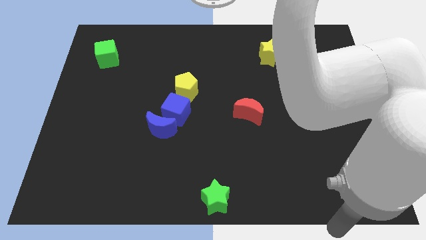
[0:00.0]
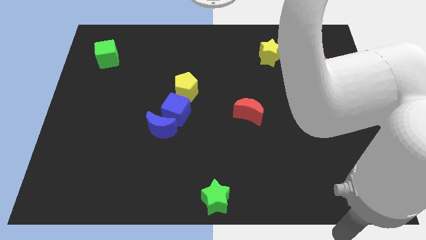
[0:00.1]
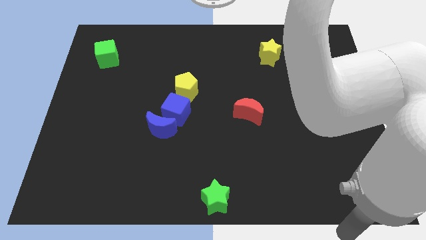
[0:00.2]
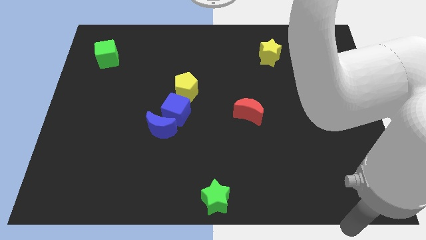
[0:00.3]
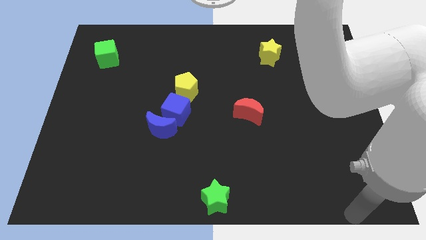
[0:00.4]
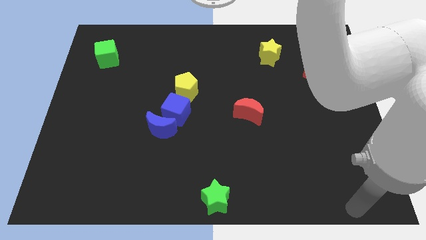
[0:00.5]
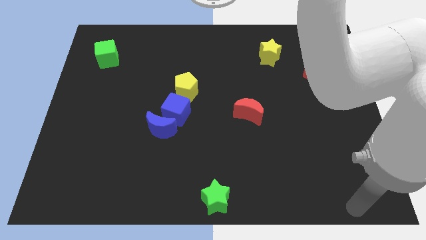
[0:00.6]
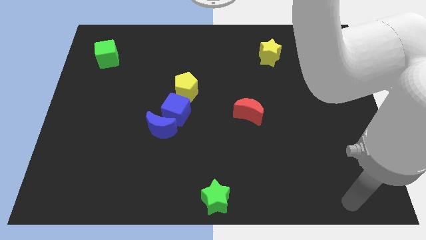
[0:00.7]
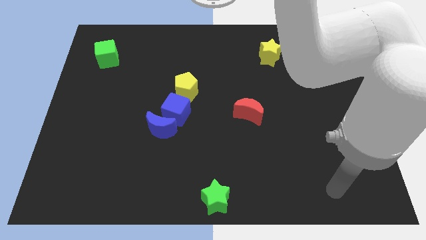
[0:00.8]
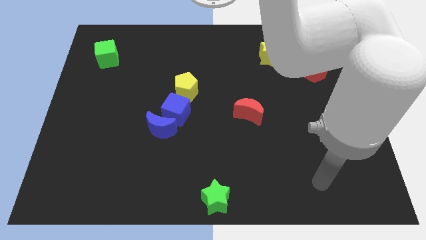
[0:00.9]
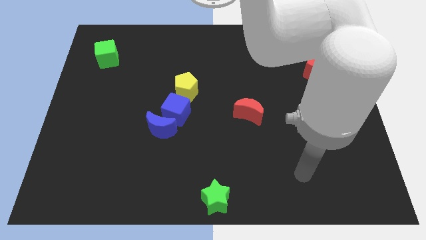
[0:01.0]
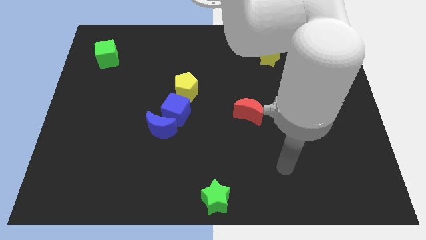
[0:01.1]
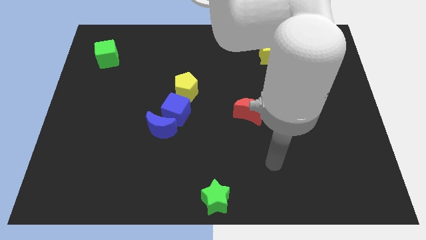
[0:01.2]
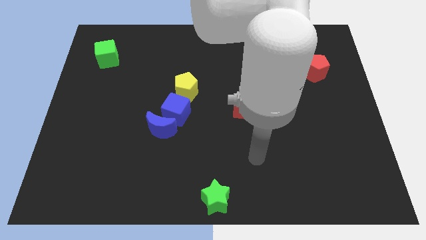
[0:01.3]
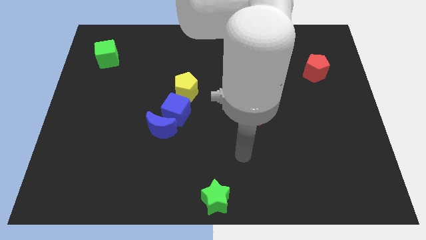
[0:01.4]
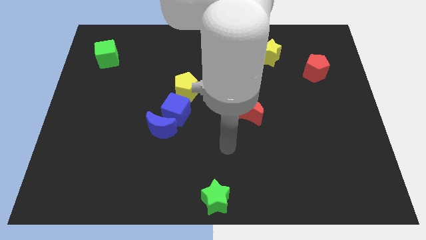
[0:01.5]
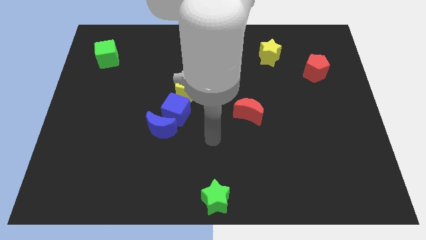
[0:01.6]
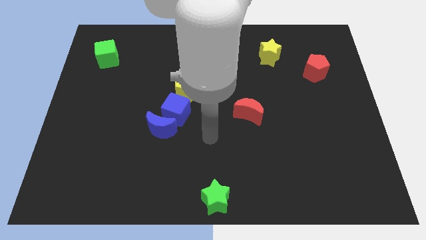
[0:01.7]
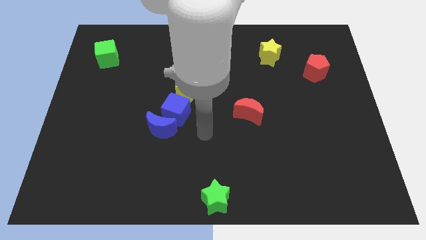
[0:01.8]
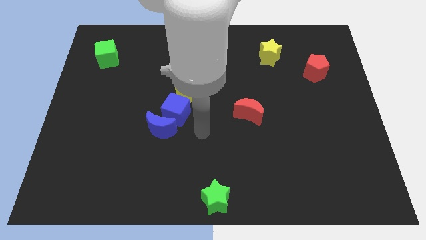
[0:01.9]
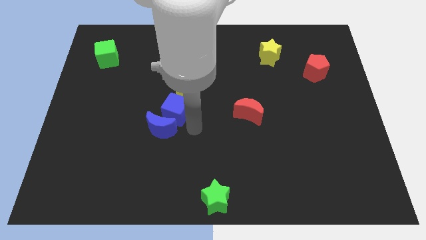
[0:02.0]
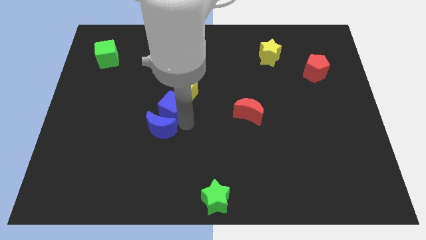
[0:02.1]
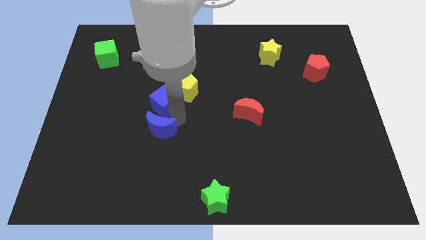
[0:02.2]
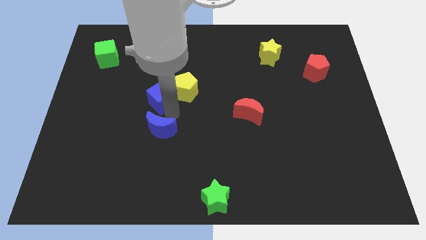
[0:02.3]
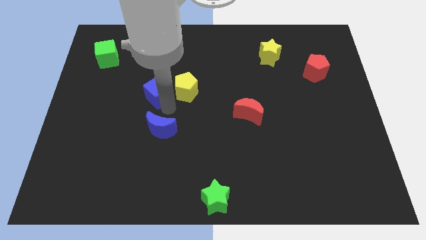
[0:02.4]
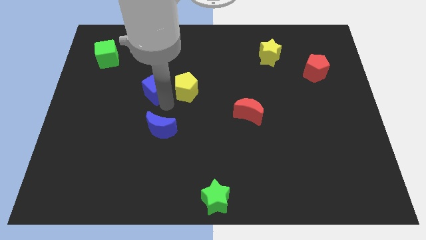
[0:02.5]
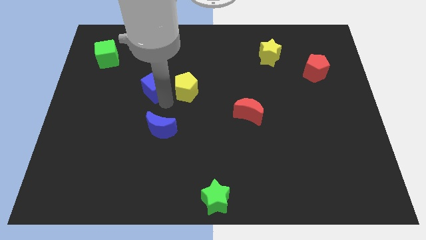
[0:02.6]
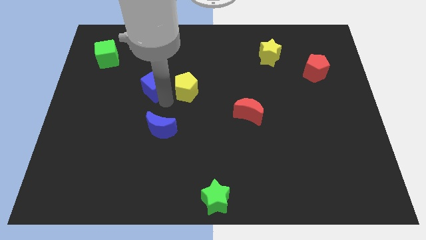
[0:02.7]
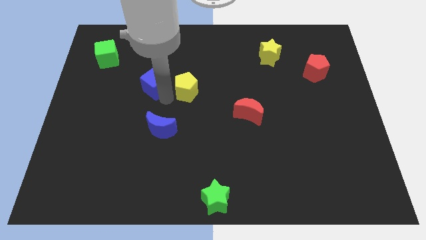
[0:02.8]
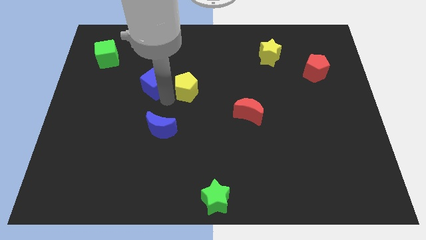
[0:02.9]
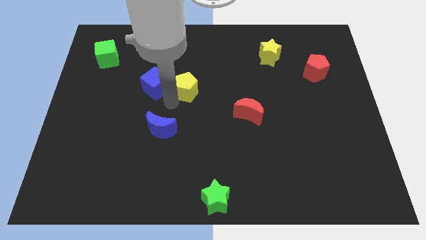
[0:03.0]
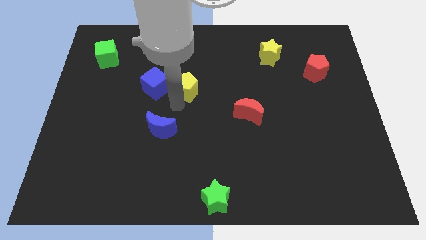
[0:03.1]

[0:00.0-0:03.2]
place the blue cube left to the yellow pentagon

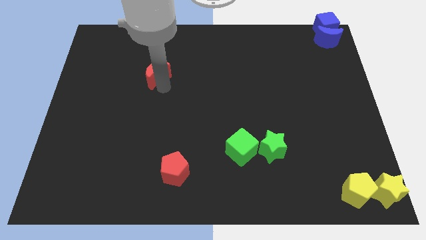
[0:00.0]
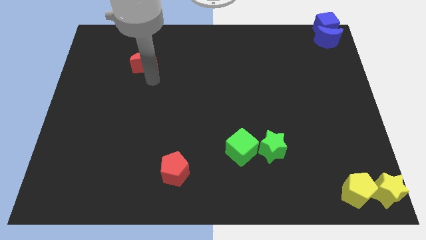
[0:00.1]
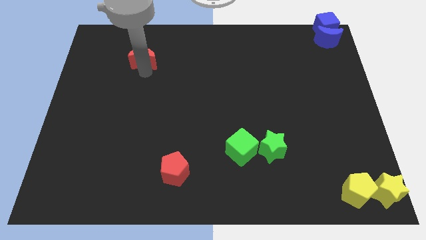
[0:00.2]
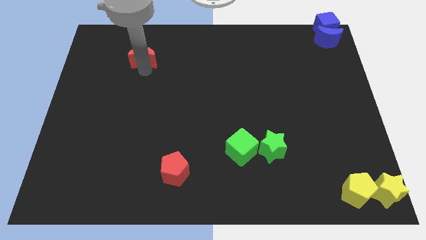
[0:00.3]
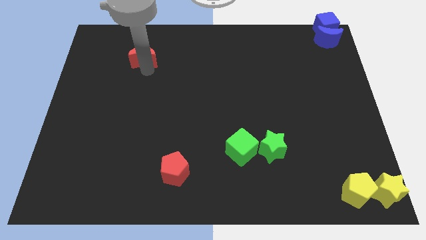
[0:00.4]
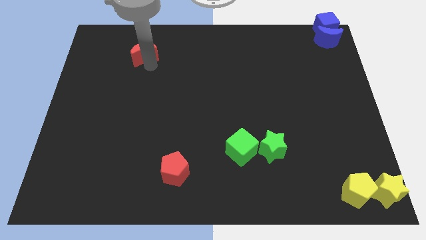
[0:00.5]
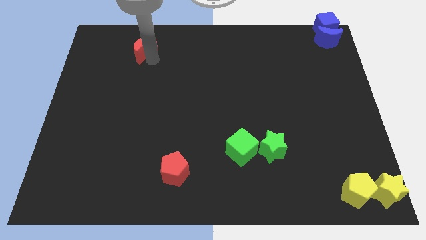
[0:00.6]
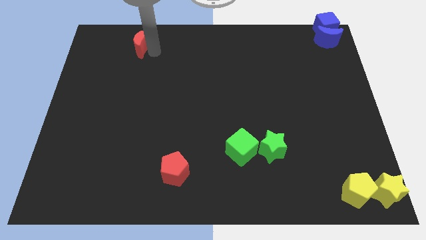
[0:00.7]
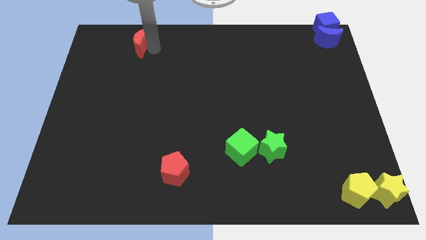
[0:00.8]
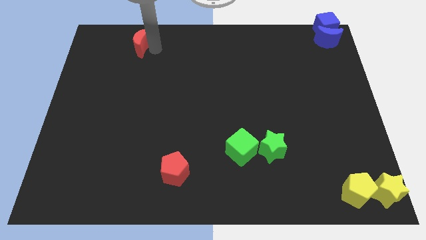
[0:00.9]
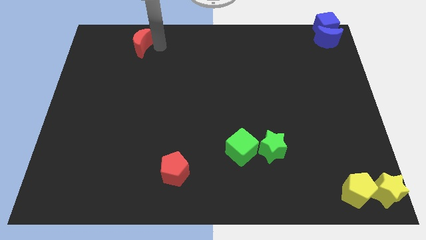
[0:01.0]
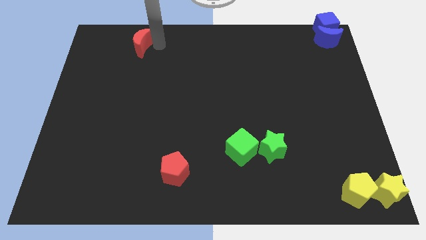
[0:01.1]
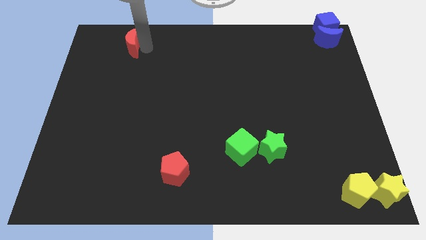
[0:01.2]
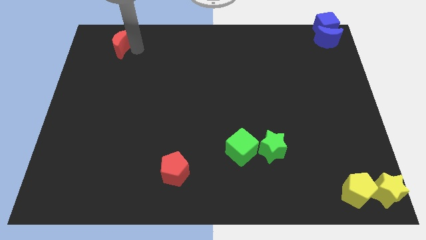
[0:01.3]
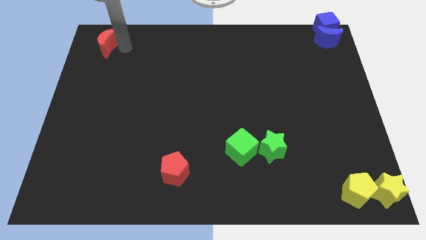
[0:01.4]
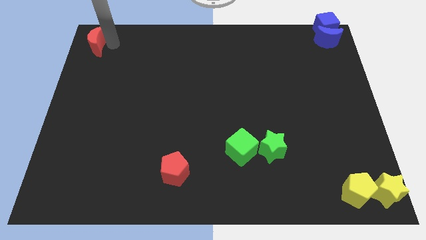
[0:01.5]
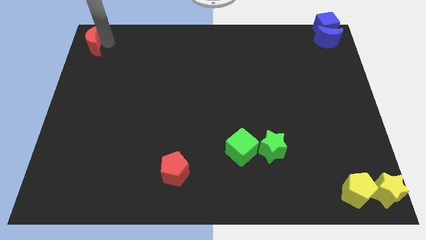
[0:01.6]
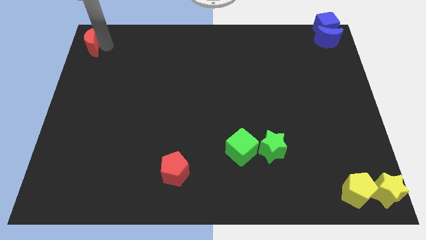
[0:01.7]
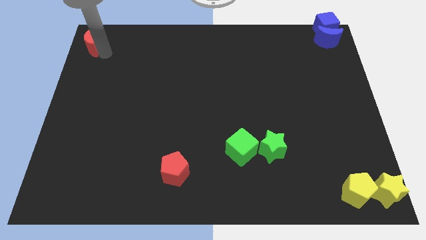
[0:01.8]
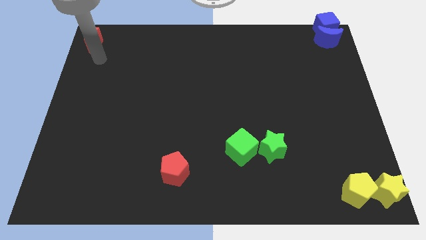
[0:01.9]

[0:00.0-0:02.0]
place the red crescent in the top left corner of the board

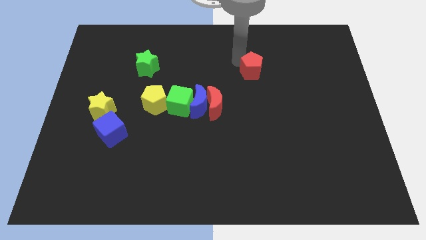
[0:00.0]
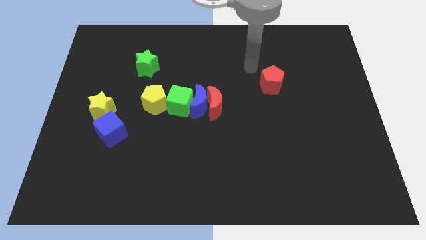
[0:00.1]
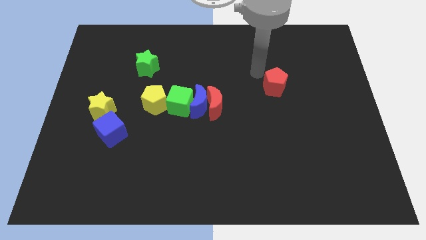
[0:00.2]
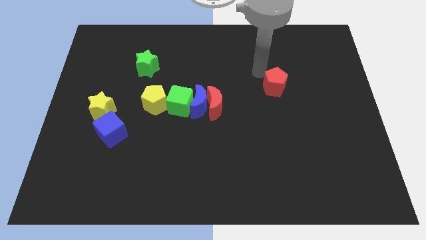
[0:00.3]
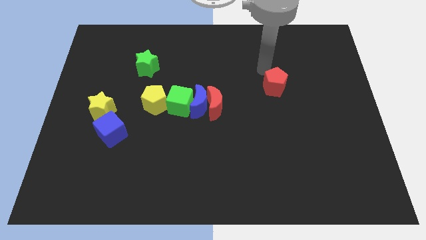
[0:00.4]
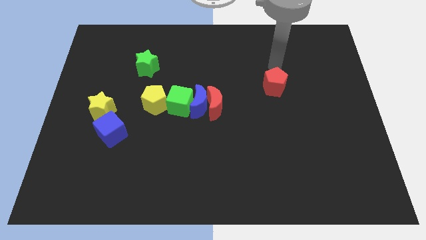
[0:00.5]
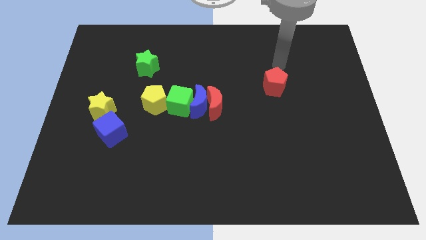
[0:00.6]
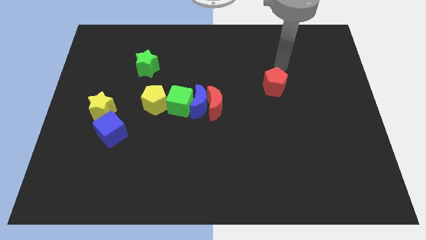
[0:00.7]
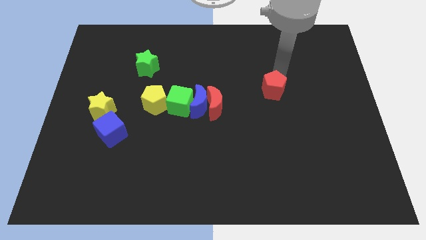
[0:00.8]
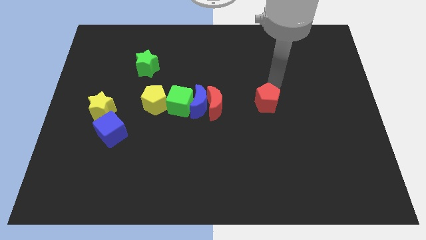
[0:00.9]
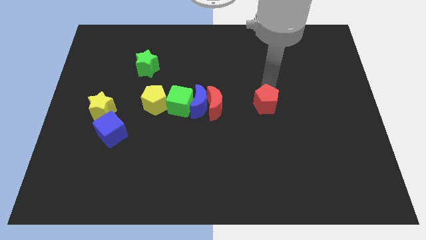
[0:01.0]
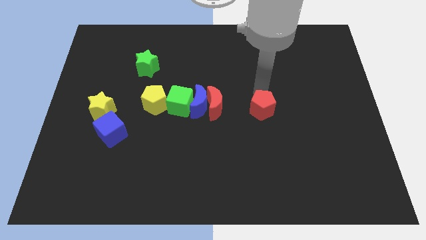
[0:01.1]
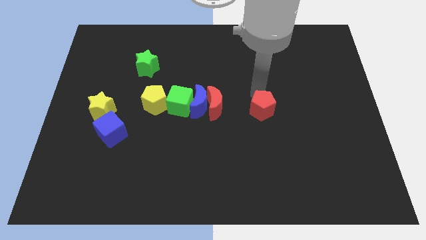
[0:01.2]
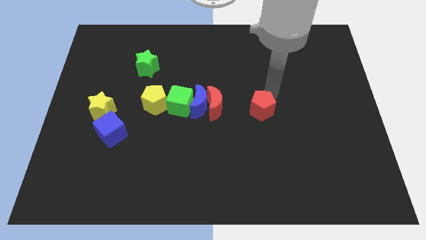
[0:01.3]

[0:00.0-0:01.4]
move the red pentagon right to the red moon

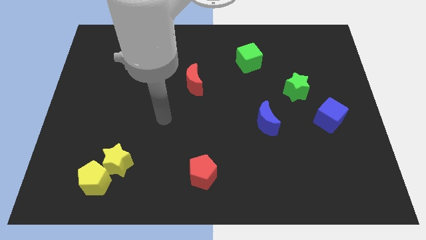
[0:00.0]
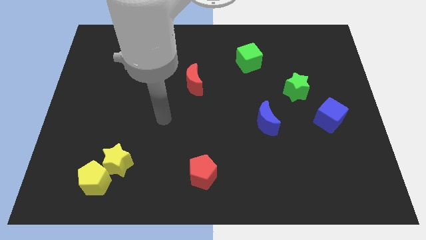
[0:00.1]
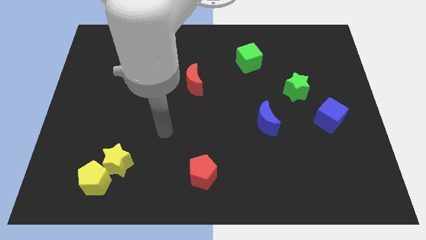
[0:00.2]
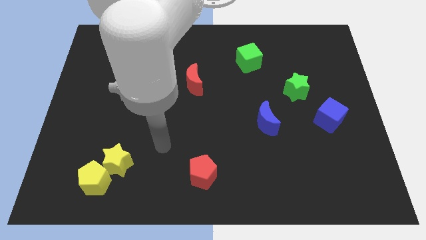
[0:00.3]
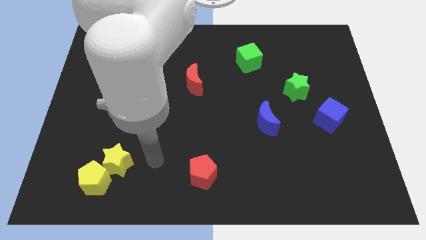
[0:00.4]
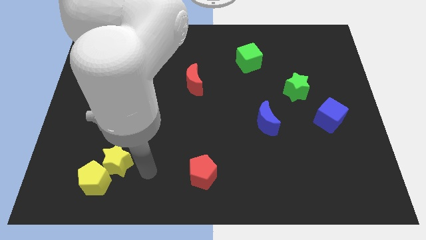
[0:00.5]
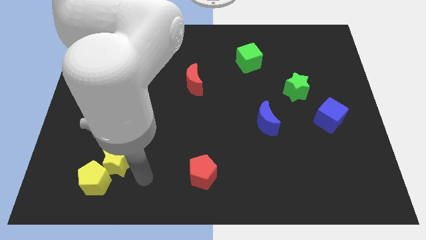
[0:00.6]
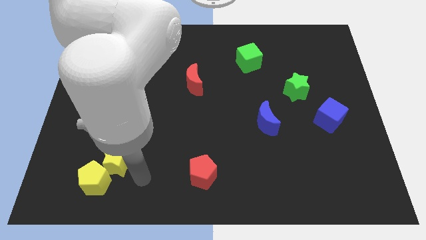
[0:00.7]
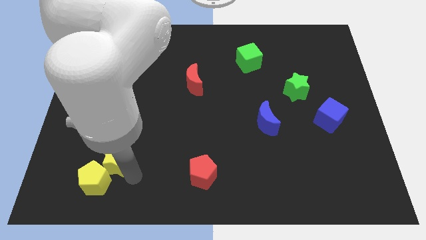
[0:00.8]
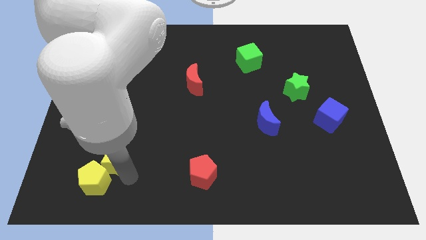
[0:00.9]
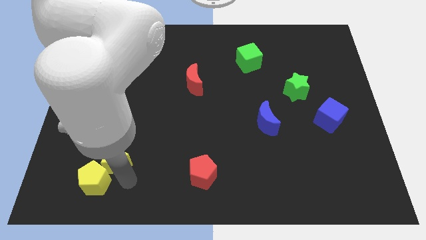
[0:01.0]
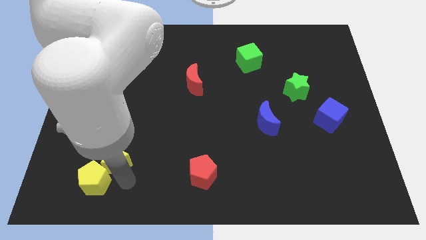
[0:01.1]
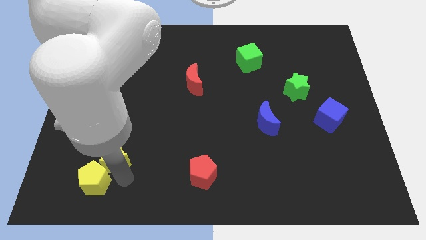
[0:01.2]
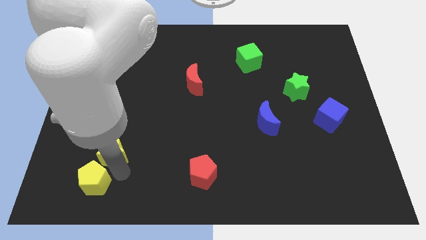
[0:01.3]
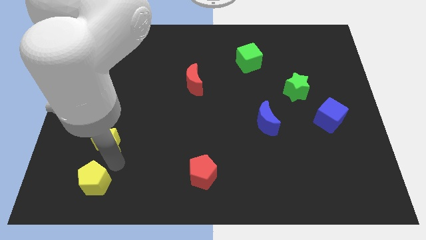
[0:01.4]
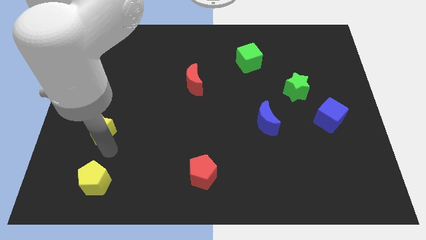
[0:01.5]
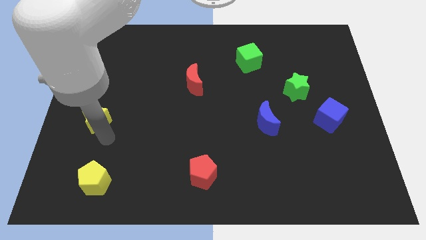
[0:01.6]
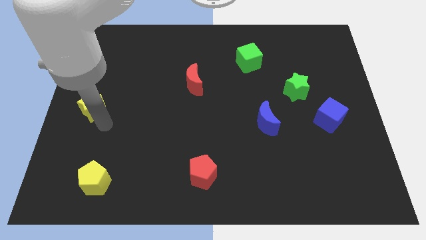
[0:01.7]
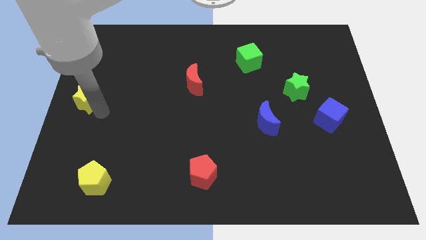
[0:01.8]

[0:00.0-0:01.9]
push the yellow star upwards of the board

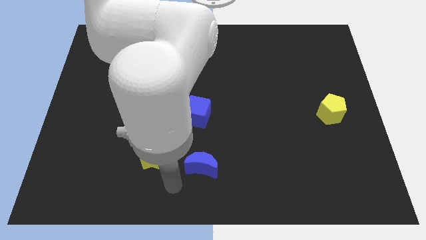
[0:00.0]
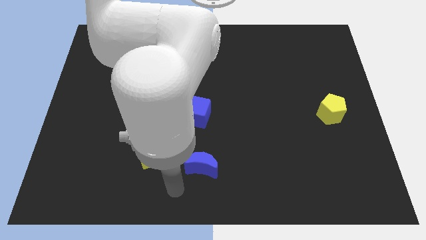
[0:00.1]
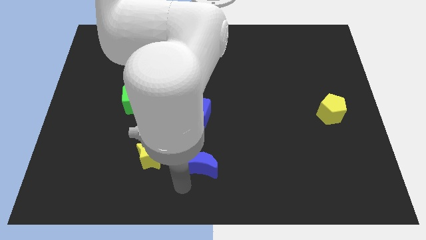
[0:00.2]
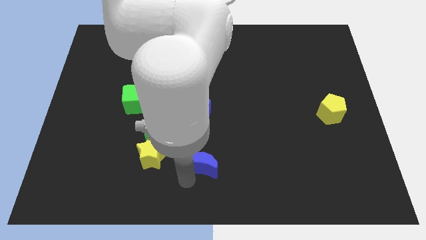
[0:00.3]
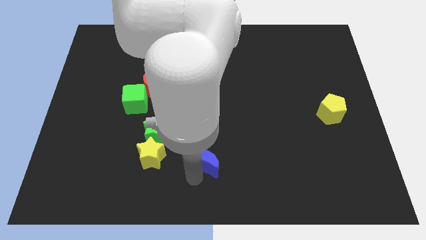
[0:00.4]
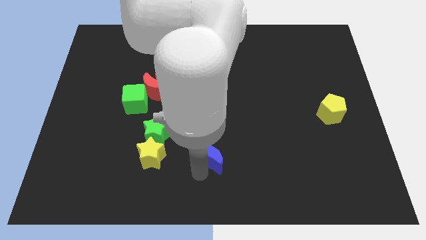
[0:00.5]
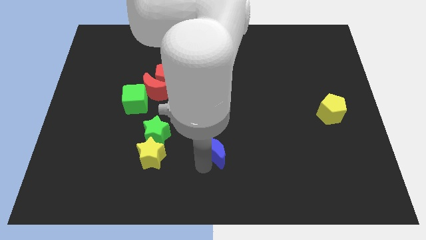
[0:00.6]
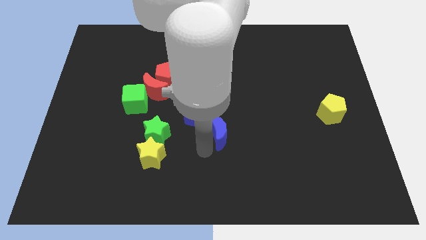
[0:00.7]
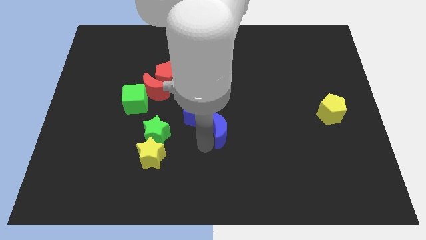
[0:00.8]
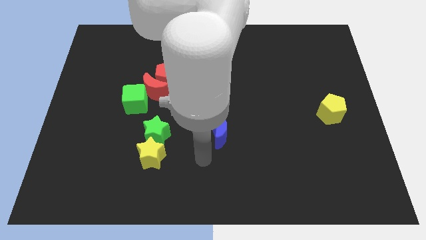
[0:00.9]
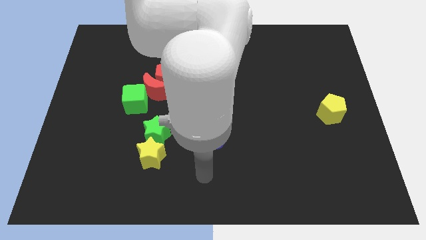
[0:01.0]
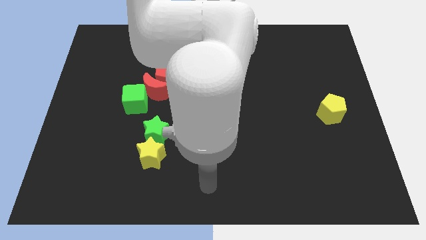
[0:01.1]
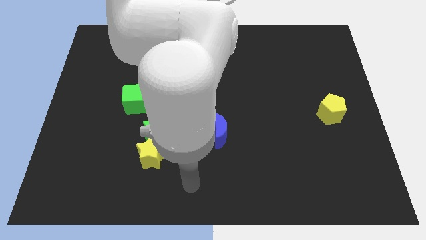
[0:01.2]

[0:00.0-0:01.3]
move blue moon into blue cube
